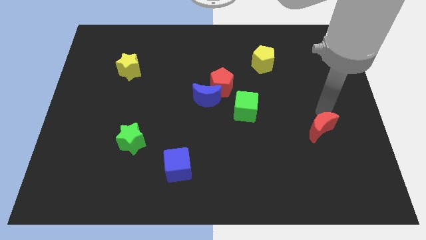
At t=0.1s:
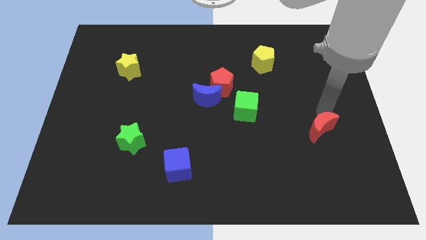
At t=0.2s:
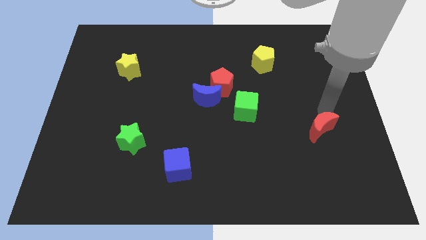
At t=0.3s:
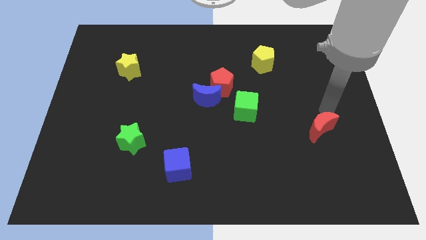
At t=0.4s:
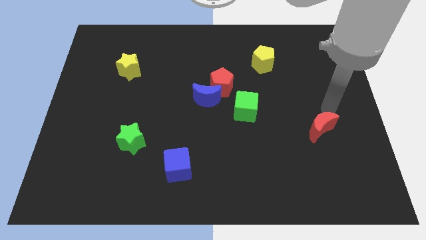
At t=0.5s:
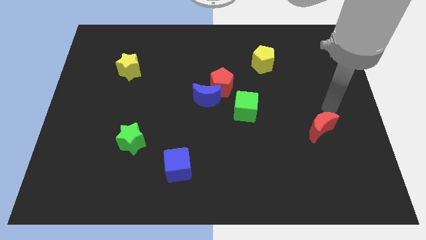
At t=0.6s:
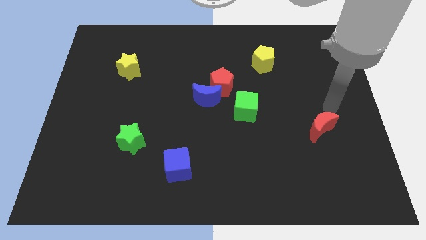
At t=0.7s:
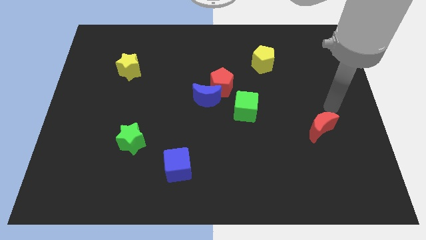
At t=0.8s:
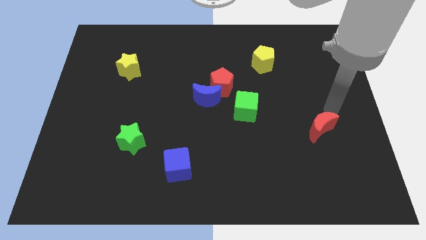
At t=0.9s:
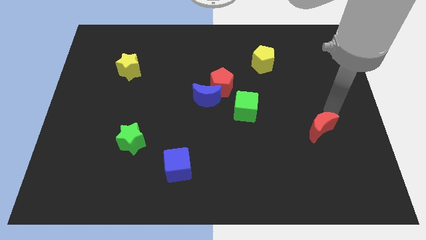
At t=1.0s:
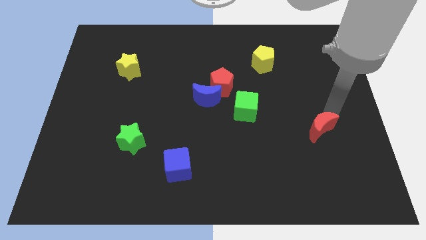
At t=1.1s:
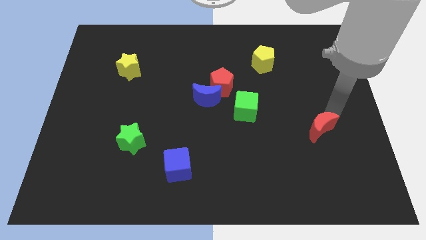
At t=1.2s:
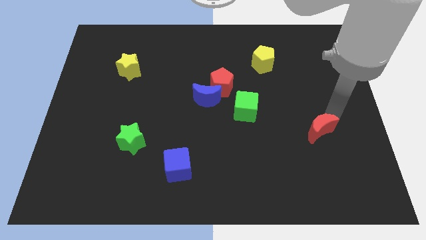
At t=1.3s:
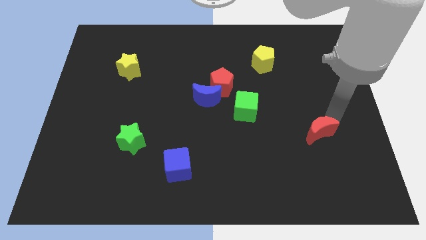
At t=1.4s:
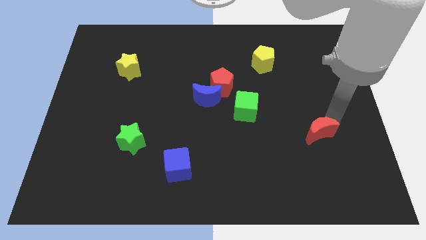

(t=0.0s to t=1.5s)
push the red crescent slightly downwards

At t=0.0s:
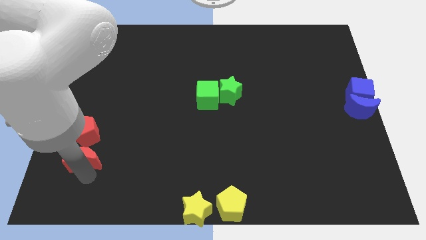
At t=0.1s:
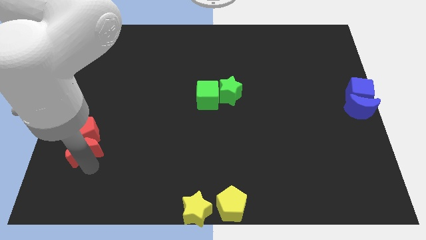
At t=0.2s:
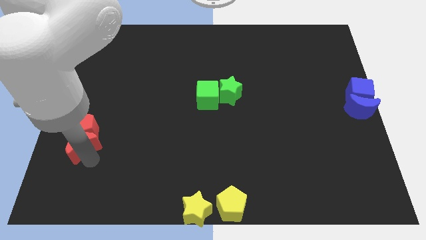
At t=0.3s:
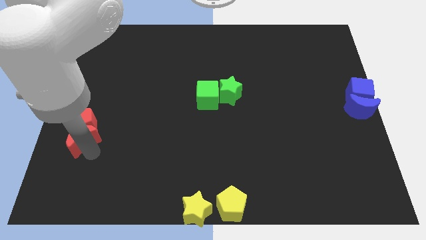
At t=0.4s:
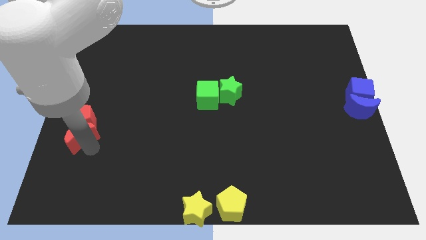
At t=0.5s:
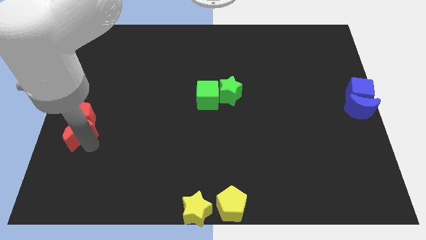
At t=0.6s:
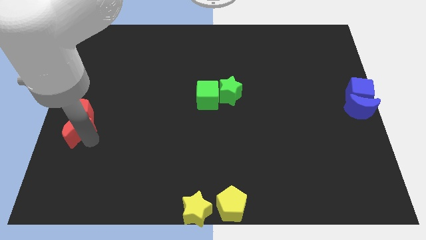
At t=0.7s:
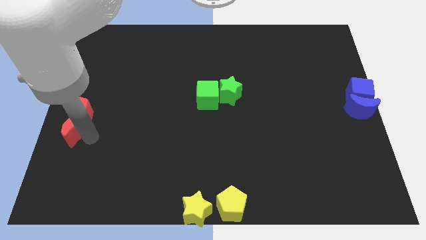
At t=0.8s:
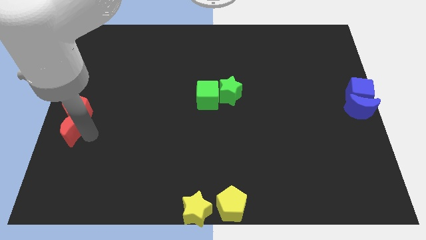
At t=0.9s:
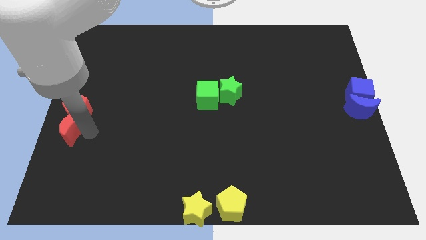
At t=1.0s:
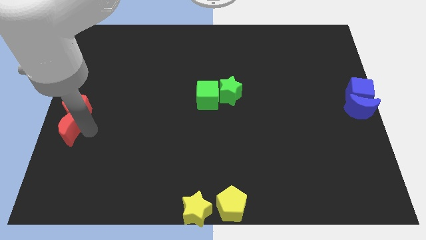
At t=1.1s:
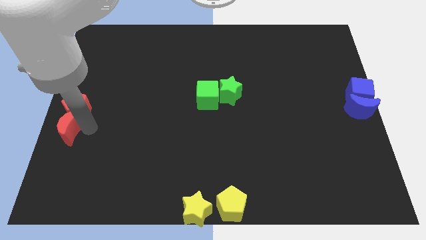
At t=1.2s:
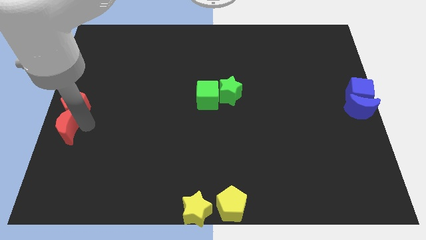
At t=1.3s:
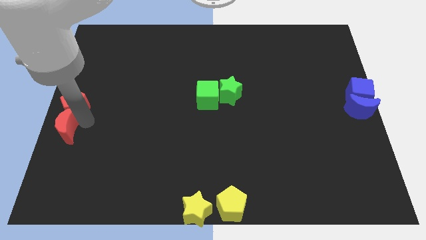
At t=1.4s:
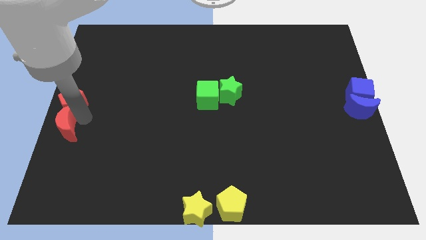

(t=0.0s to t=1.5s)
move the red crescent into the red pentagon on the board

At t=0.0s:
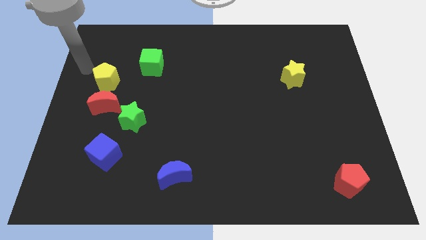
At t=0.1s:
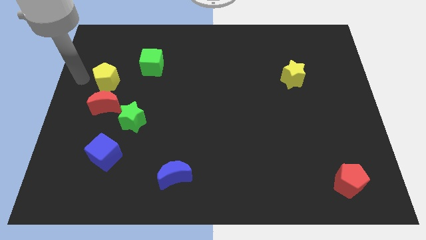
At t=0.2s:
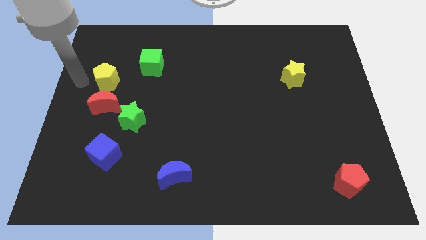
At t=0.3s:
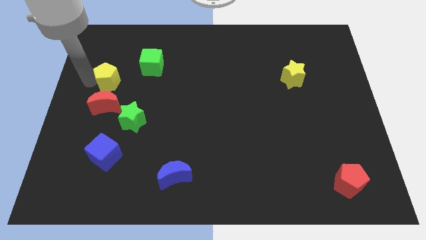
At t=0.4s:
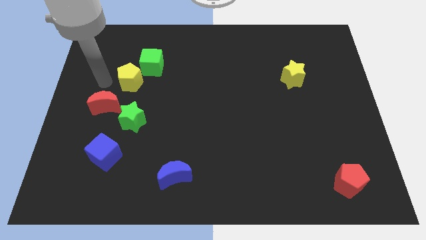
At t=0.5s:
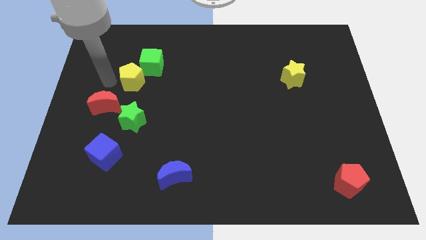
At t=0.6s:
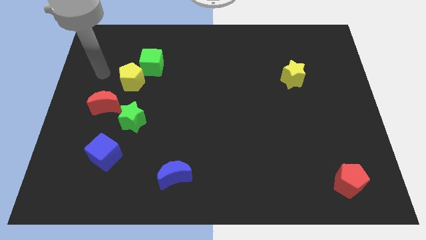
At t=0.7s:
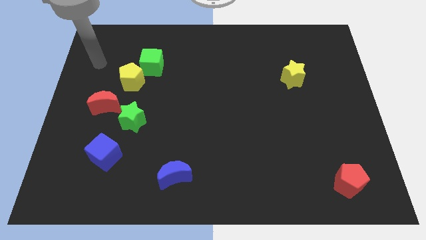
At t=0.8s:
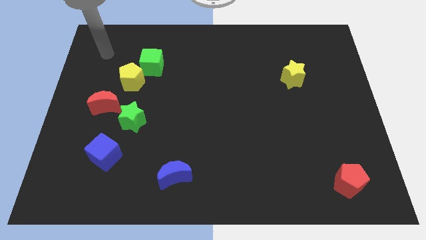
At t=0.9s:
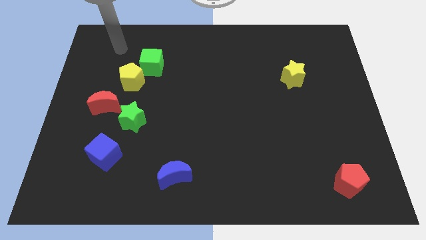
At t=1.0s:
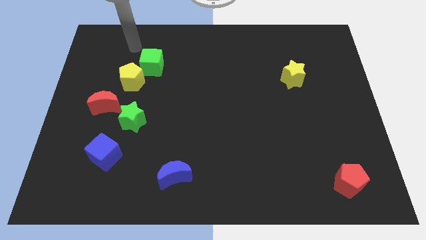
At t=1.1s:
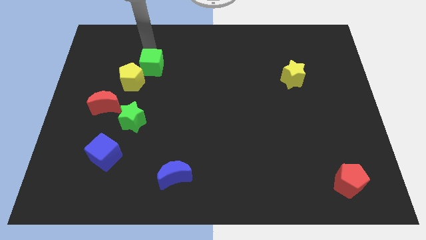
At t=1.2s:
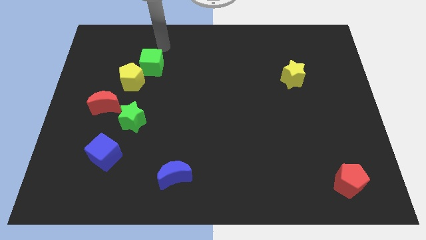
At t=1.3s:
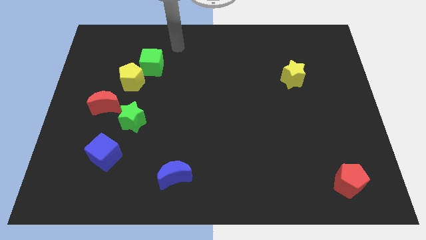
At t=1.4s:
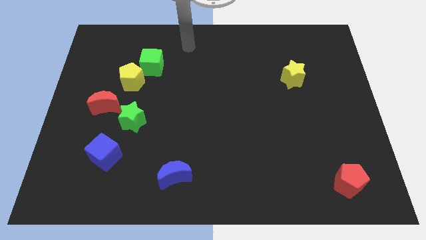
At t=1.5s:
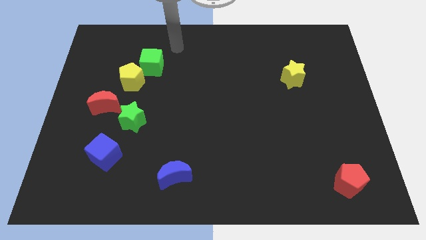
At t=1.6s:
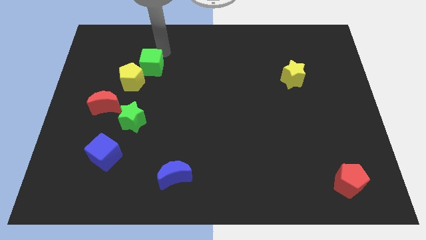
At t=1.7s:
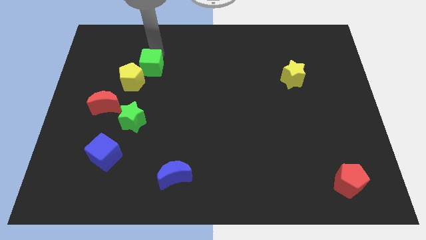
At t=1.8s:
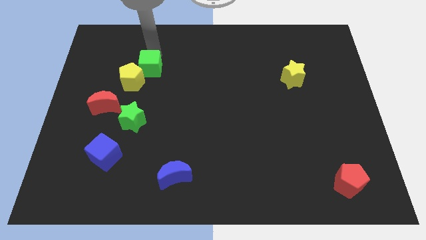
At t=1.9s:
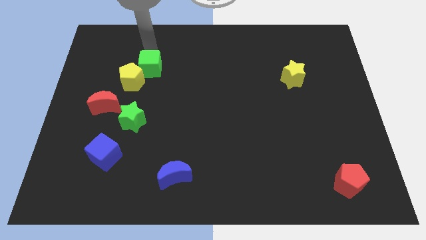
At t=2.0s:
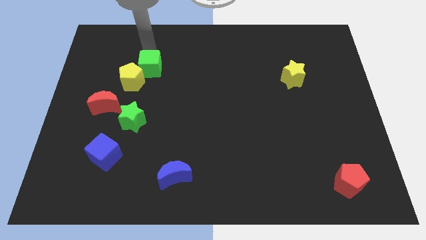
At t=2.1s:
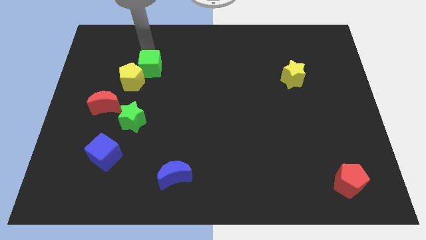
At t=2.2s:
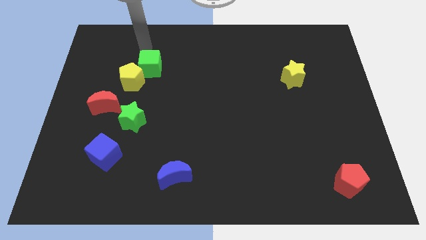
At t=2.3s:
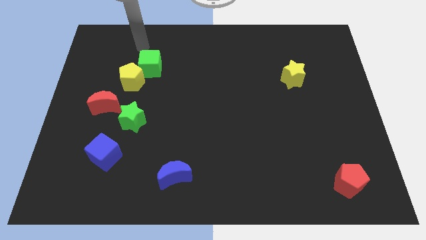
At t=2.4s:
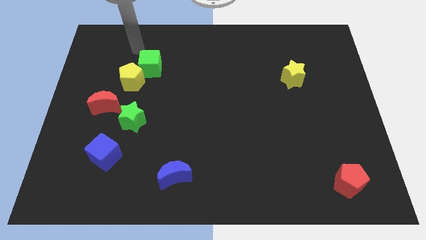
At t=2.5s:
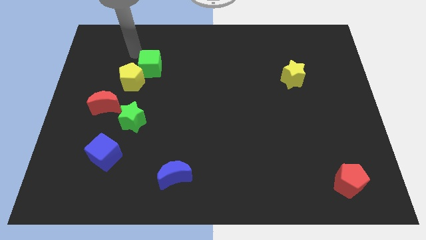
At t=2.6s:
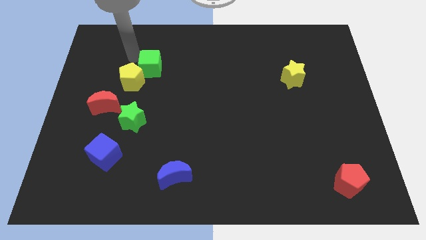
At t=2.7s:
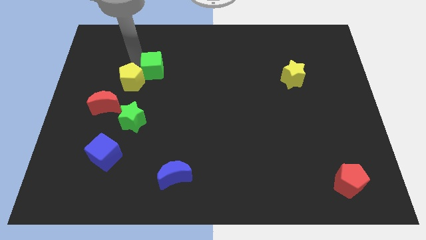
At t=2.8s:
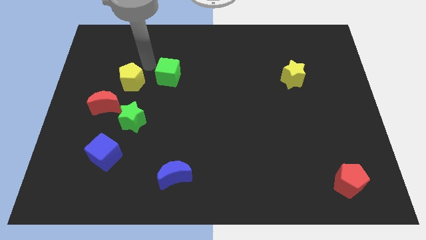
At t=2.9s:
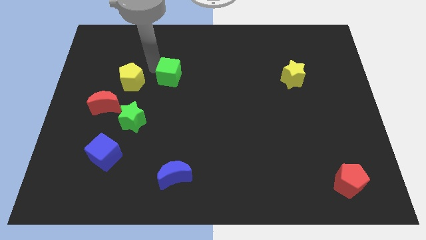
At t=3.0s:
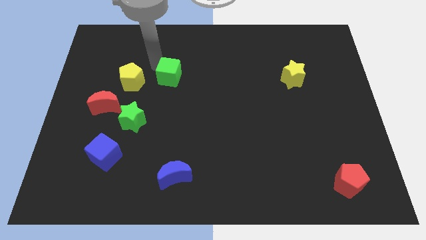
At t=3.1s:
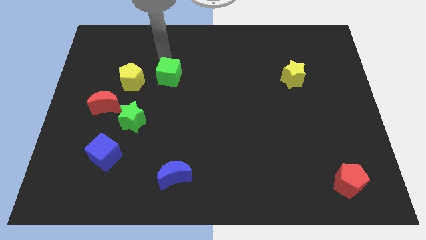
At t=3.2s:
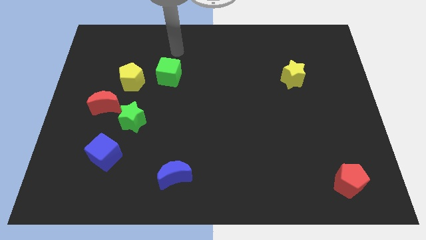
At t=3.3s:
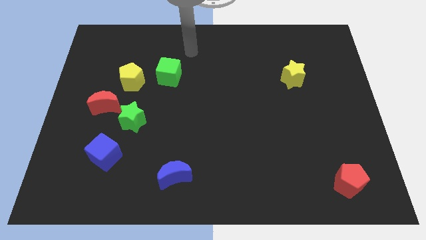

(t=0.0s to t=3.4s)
move the green cube right to the yellow pentagon

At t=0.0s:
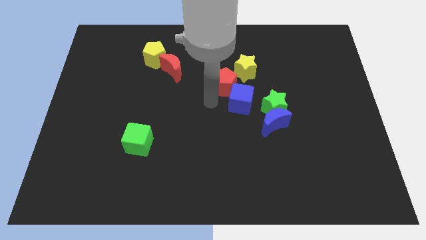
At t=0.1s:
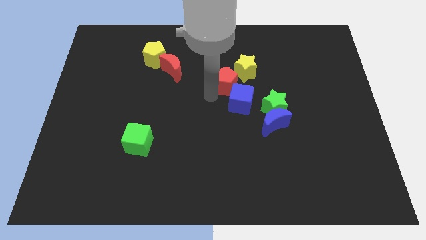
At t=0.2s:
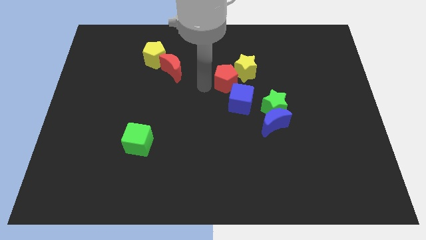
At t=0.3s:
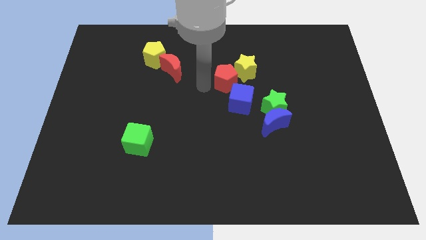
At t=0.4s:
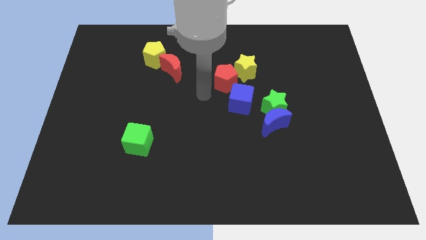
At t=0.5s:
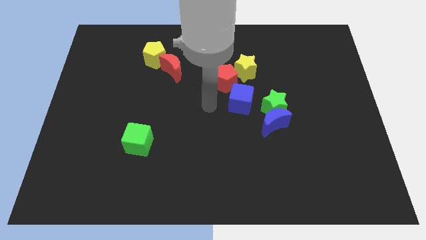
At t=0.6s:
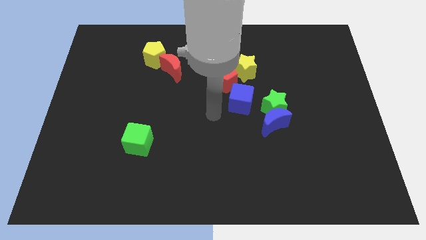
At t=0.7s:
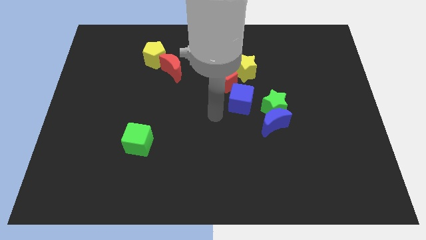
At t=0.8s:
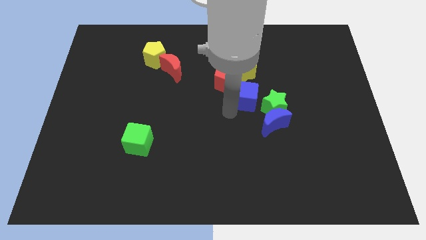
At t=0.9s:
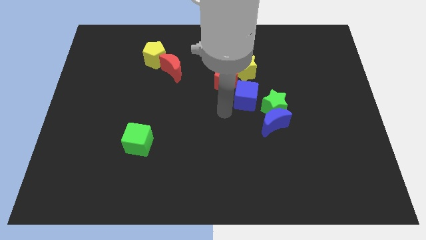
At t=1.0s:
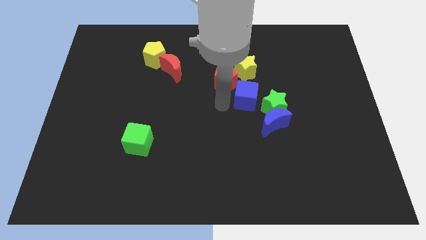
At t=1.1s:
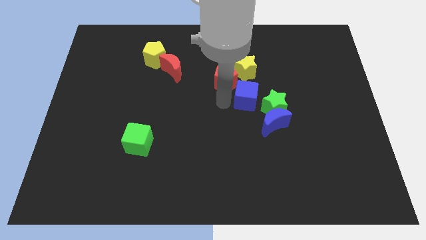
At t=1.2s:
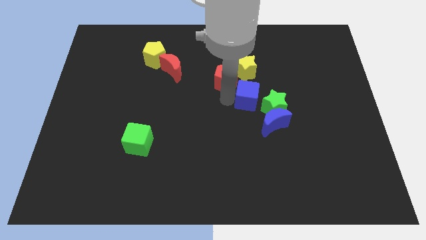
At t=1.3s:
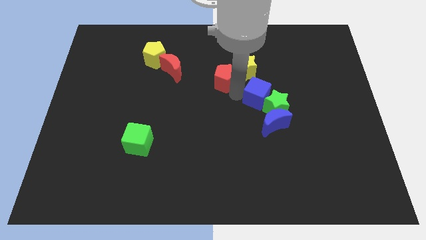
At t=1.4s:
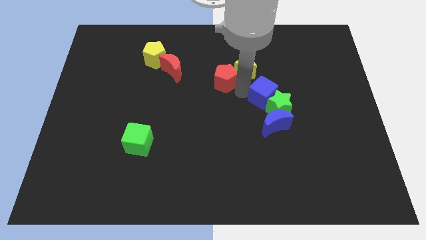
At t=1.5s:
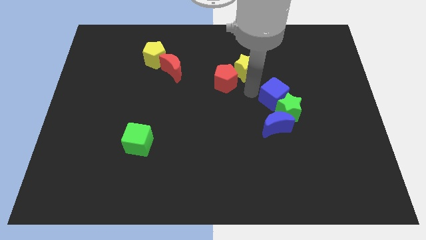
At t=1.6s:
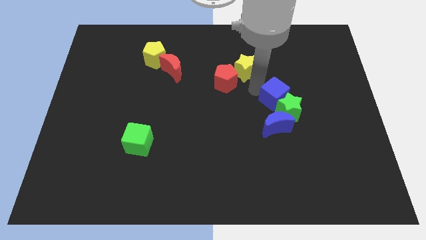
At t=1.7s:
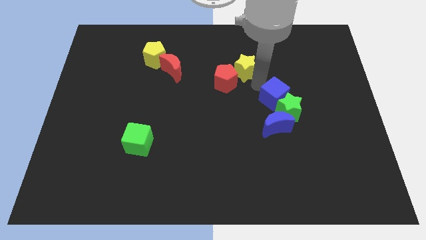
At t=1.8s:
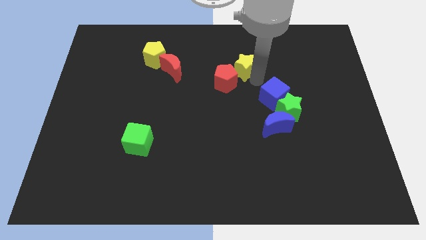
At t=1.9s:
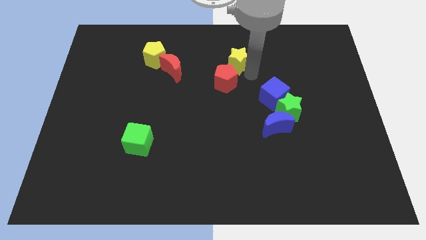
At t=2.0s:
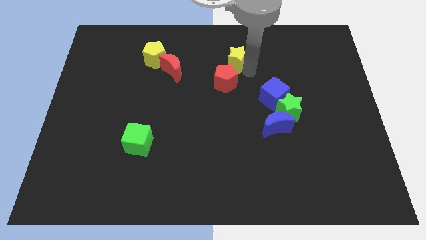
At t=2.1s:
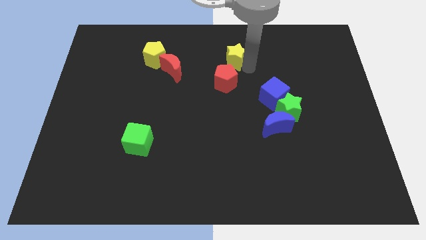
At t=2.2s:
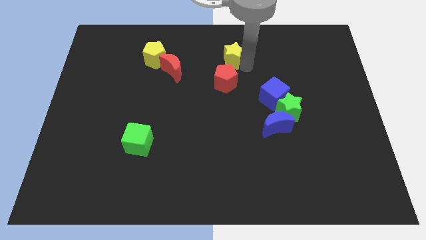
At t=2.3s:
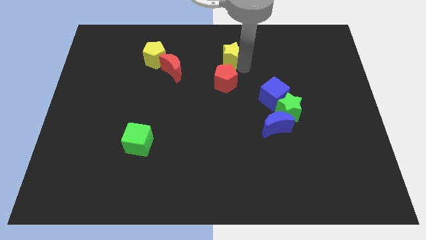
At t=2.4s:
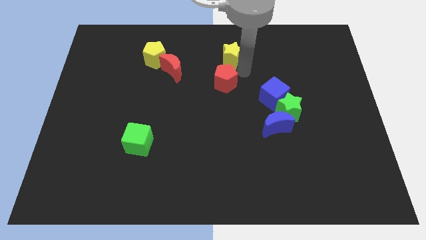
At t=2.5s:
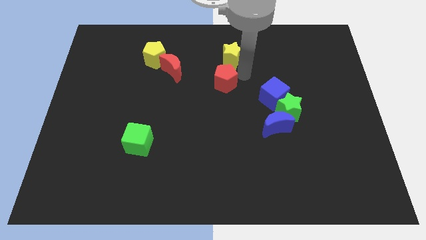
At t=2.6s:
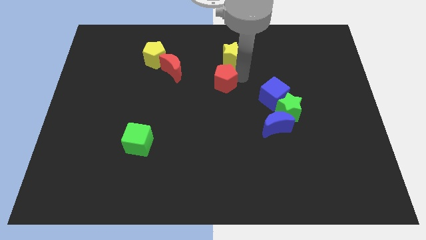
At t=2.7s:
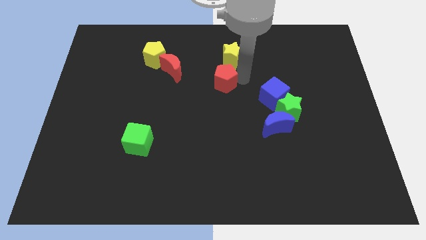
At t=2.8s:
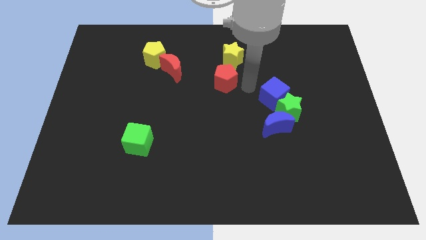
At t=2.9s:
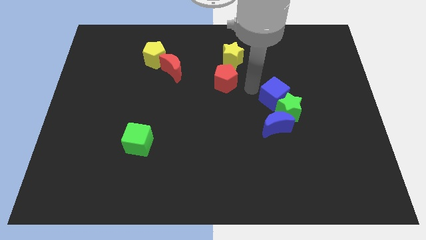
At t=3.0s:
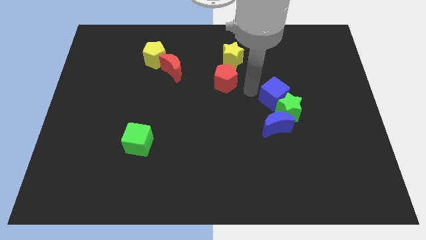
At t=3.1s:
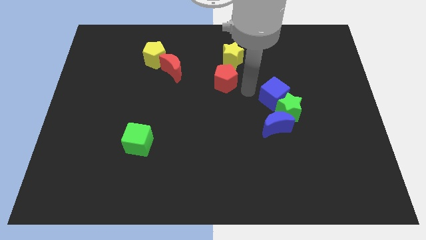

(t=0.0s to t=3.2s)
push the yellow star to the top of the red pentagon
